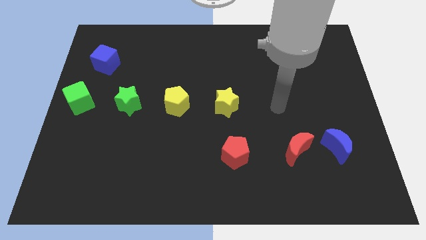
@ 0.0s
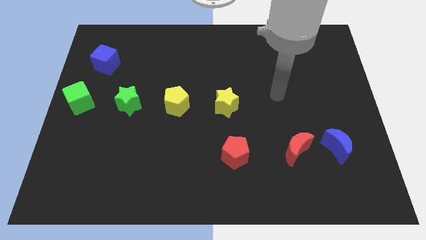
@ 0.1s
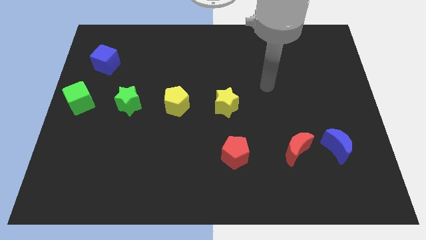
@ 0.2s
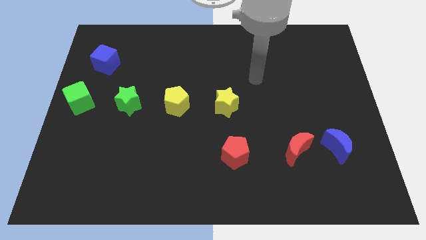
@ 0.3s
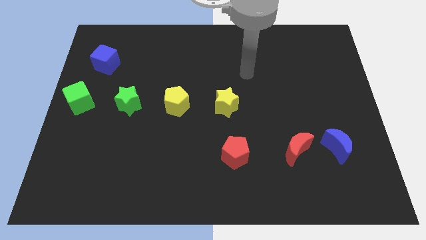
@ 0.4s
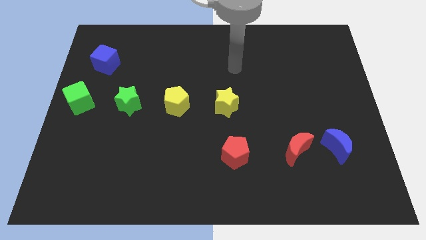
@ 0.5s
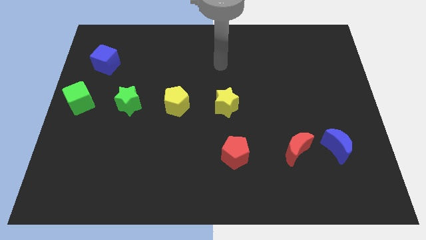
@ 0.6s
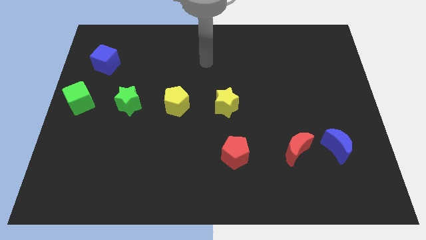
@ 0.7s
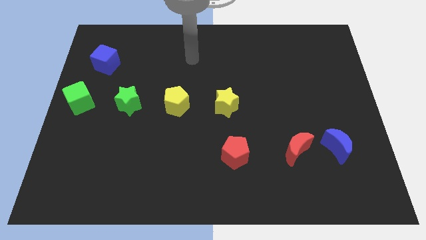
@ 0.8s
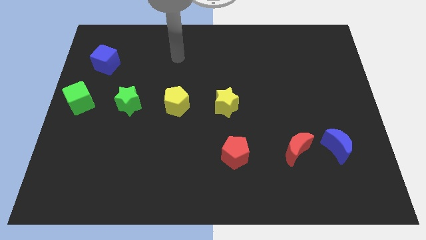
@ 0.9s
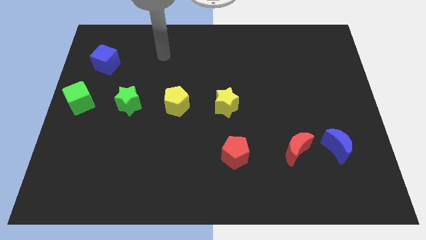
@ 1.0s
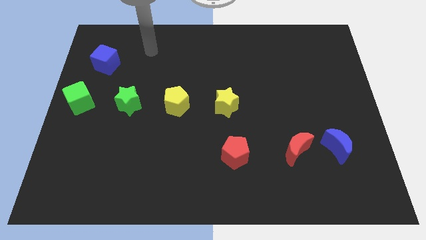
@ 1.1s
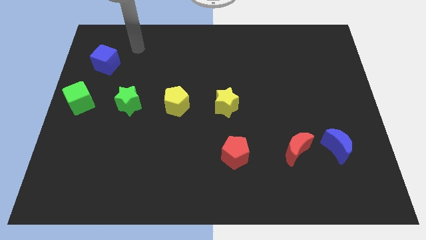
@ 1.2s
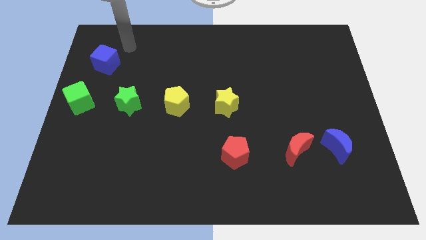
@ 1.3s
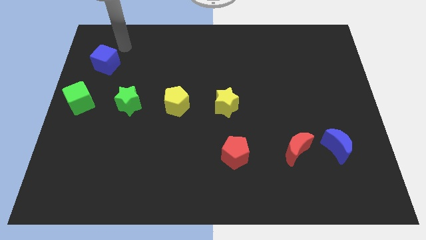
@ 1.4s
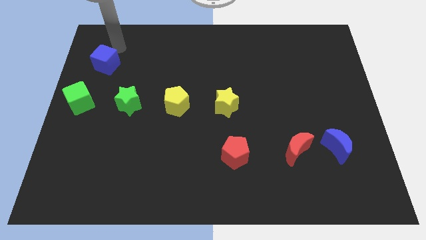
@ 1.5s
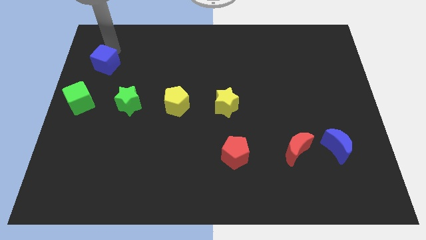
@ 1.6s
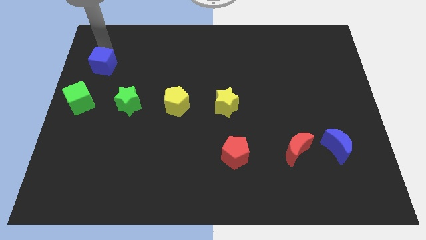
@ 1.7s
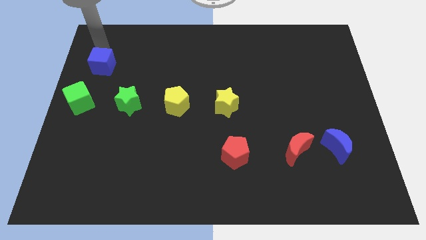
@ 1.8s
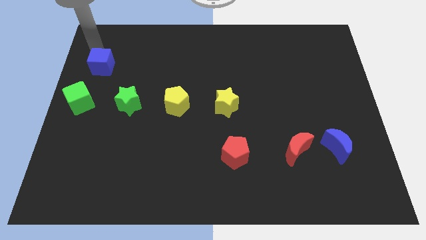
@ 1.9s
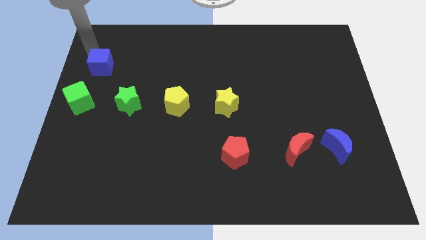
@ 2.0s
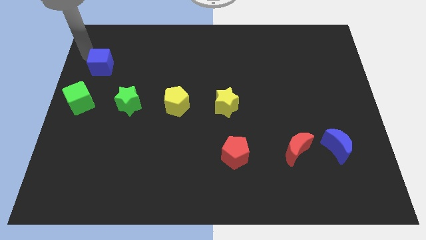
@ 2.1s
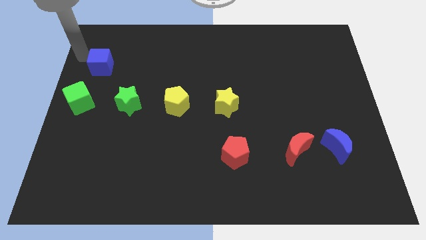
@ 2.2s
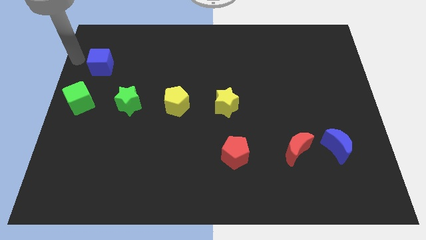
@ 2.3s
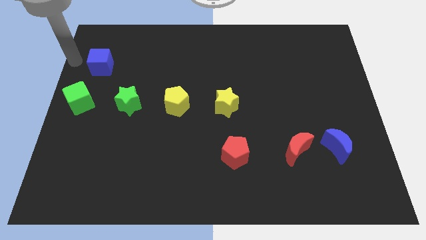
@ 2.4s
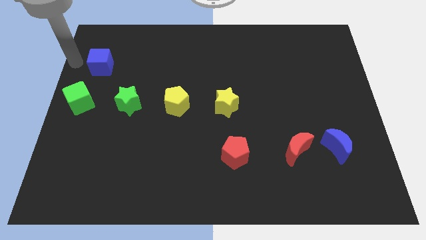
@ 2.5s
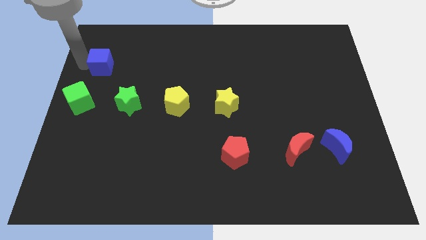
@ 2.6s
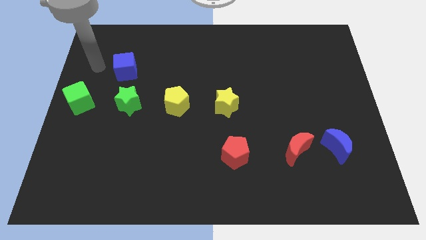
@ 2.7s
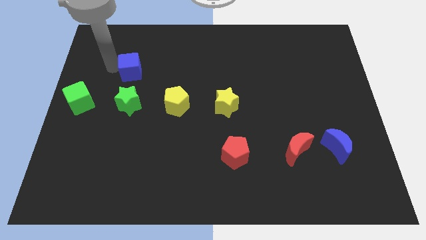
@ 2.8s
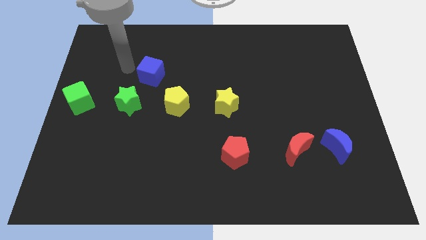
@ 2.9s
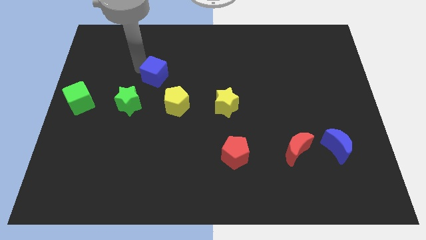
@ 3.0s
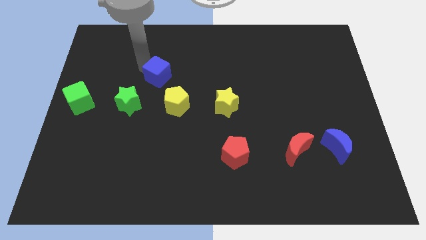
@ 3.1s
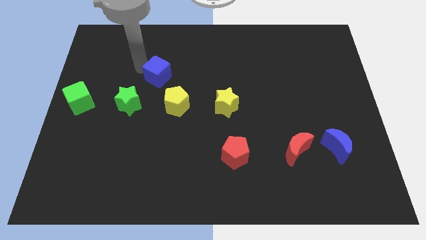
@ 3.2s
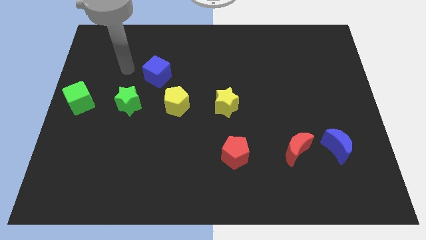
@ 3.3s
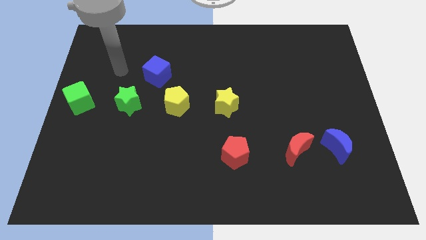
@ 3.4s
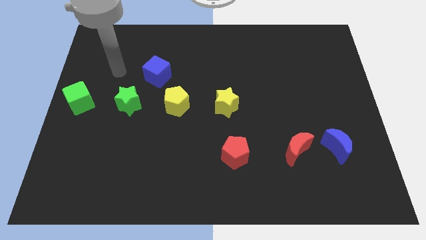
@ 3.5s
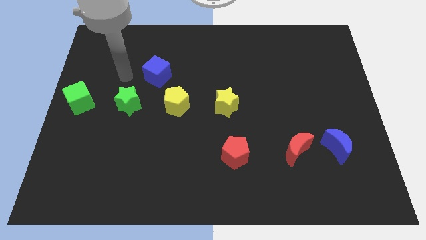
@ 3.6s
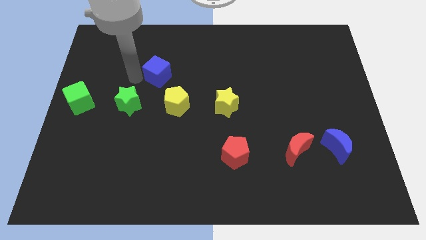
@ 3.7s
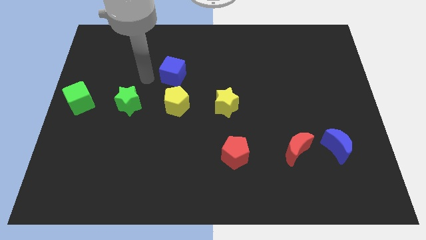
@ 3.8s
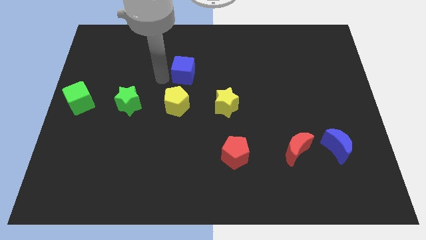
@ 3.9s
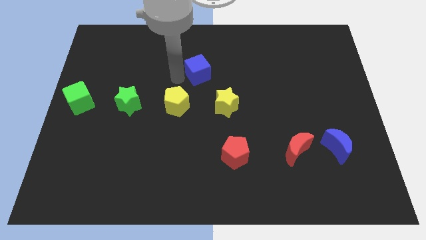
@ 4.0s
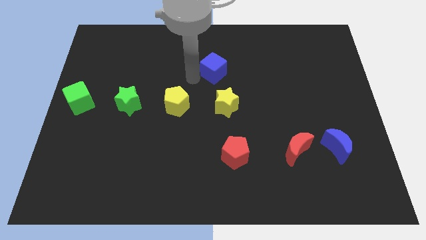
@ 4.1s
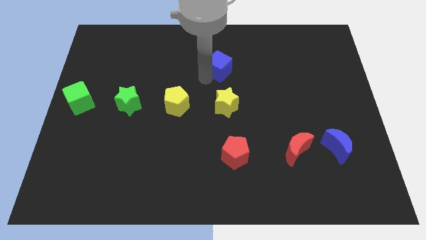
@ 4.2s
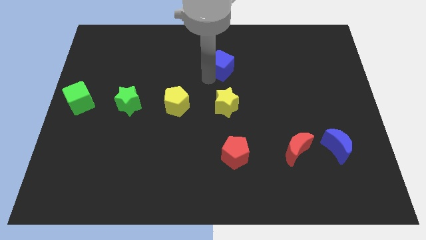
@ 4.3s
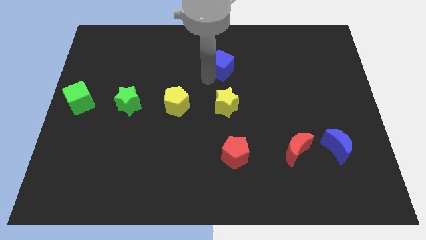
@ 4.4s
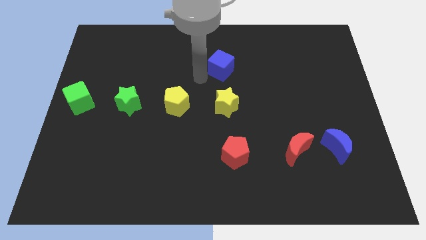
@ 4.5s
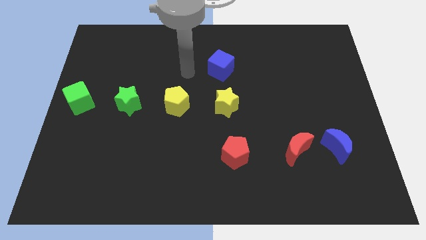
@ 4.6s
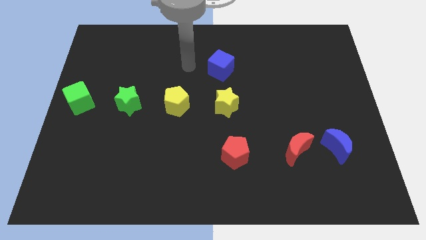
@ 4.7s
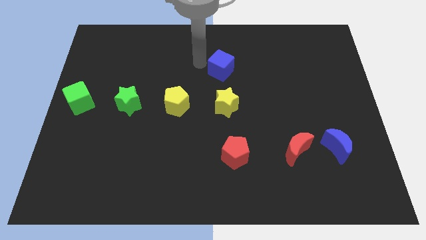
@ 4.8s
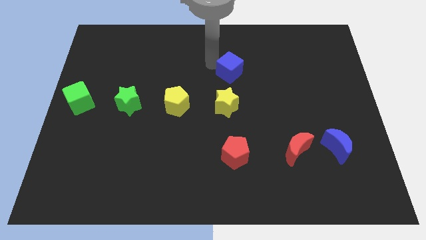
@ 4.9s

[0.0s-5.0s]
push the blue cube above the yellow star

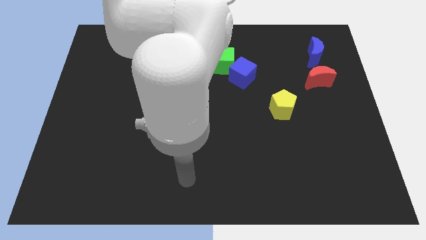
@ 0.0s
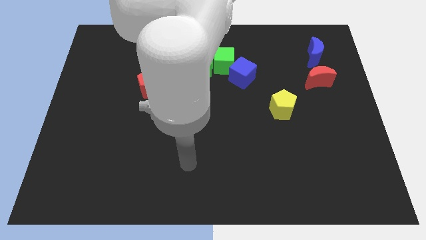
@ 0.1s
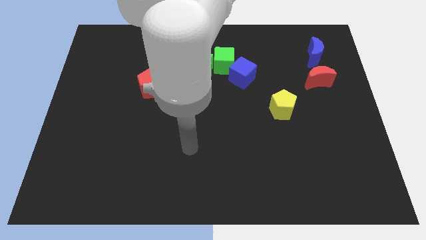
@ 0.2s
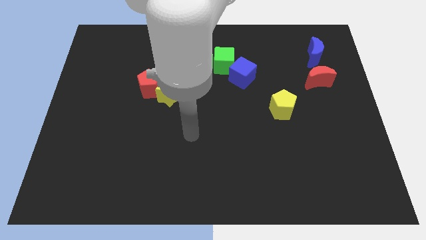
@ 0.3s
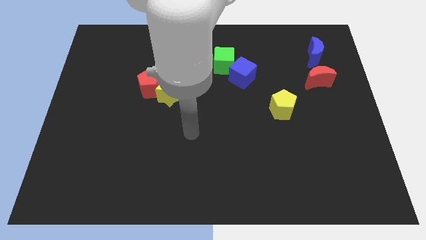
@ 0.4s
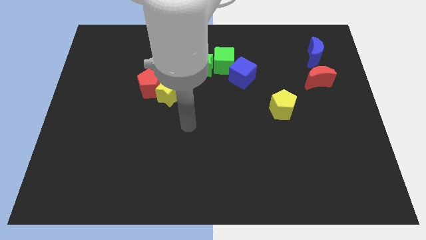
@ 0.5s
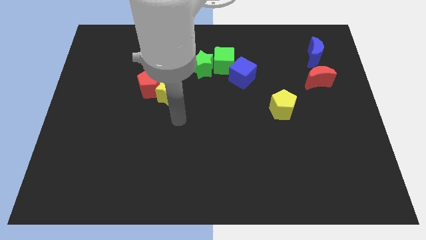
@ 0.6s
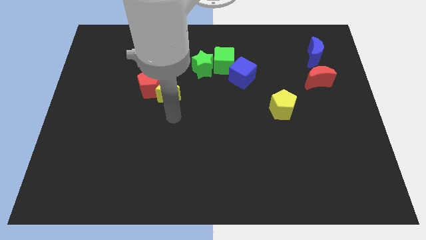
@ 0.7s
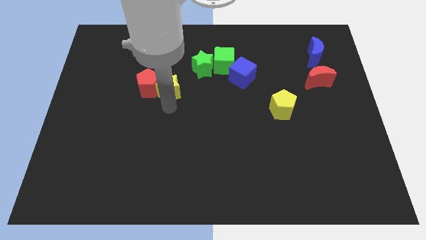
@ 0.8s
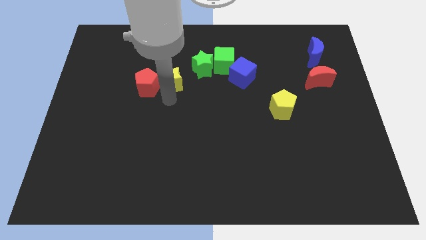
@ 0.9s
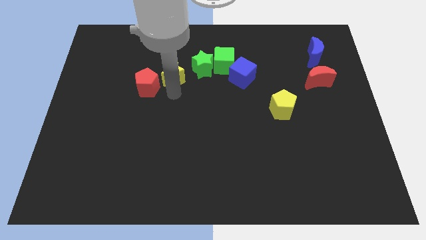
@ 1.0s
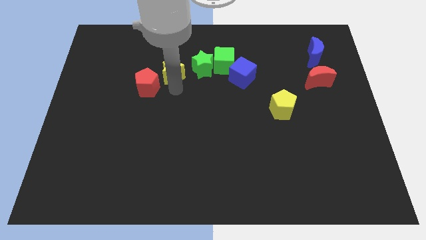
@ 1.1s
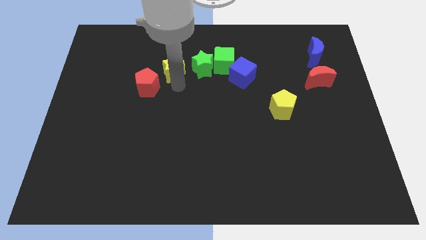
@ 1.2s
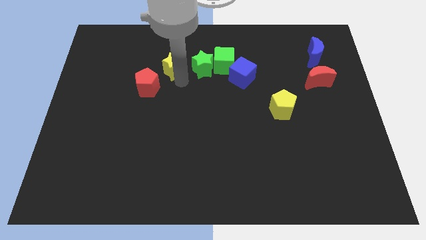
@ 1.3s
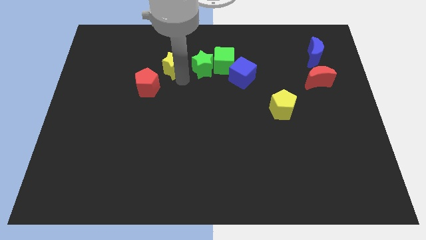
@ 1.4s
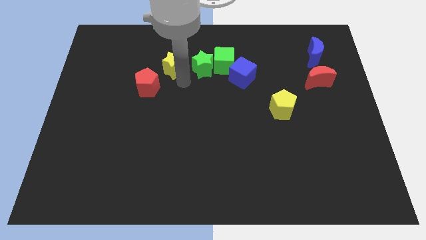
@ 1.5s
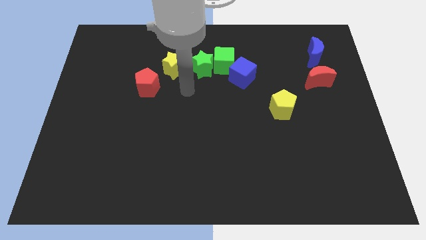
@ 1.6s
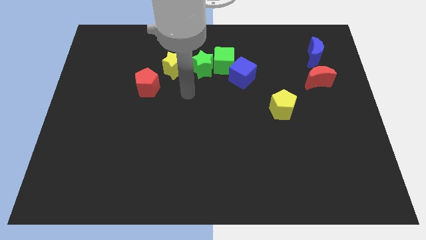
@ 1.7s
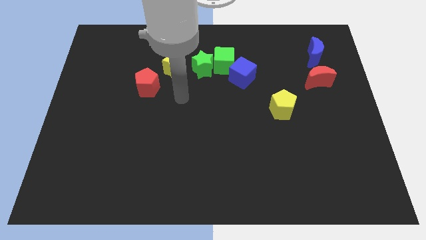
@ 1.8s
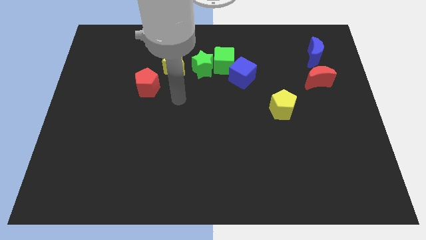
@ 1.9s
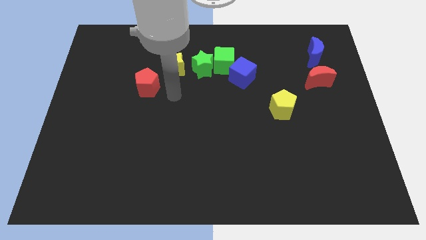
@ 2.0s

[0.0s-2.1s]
push the yellow star to the left side of the green star

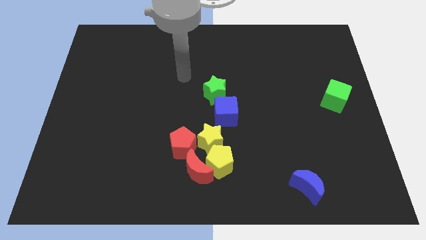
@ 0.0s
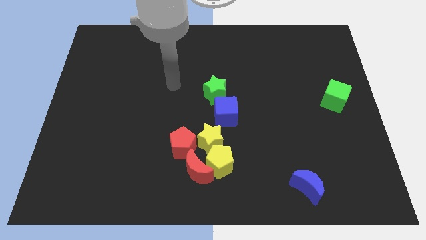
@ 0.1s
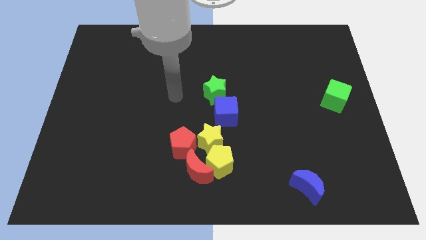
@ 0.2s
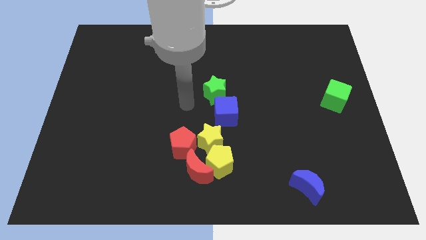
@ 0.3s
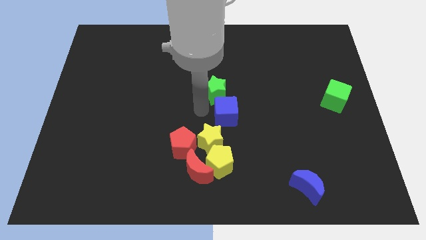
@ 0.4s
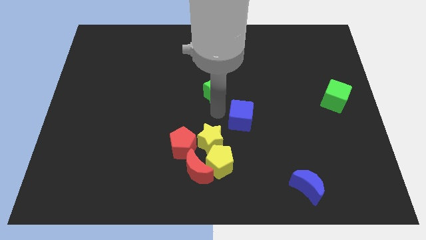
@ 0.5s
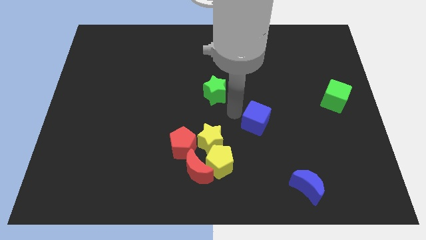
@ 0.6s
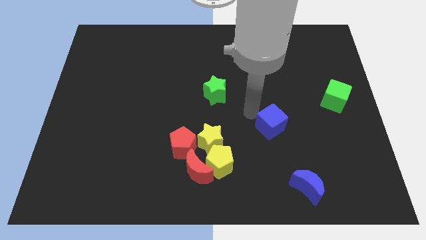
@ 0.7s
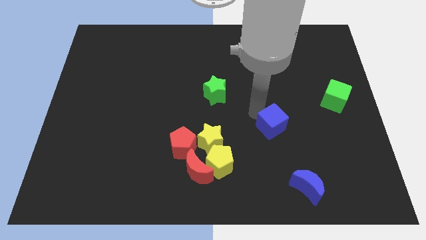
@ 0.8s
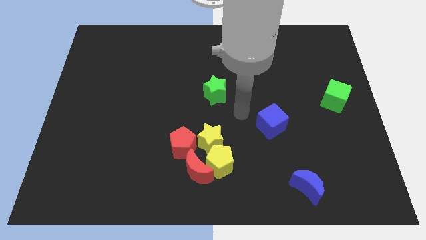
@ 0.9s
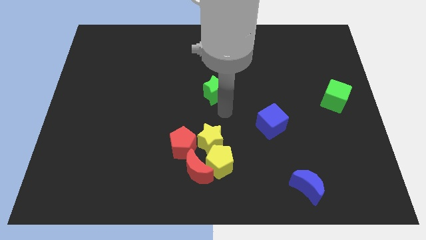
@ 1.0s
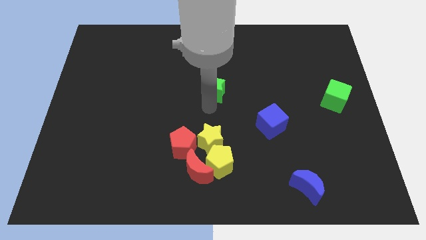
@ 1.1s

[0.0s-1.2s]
separate the blue cube from green star

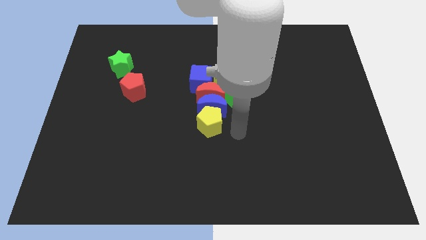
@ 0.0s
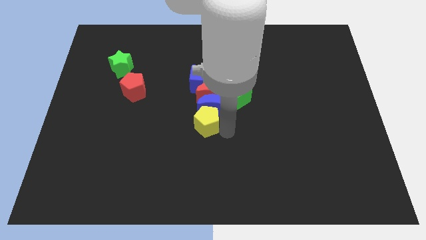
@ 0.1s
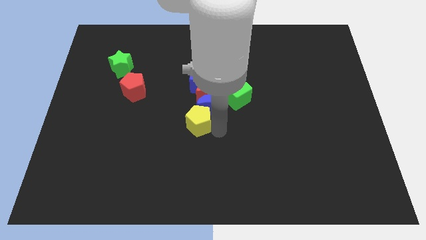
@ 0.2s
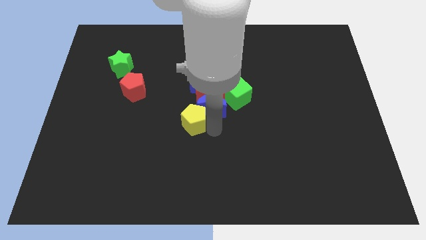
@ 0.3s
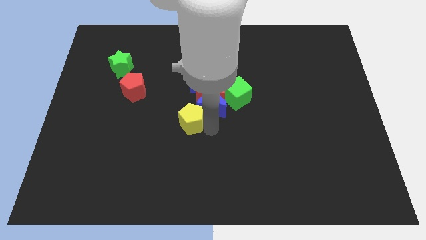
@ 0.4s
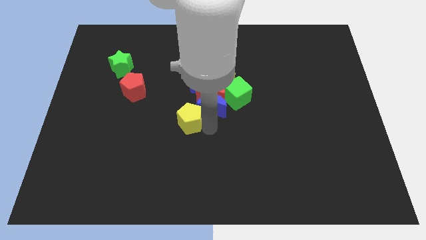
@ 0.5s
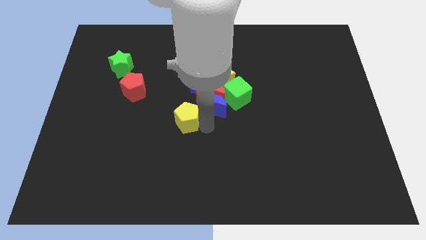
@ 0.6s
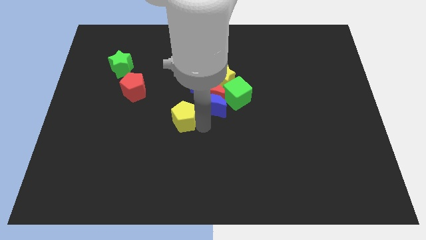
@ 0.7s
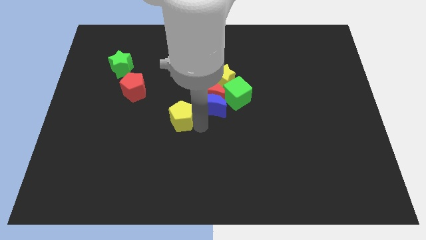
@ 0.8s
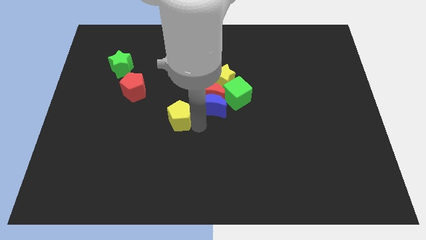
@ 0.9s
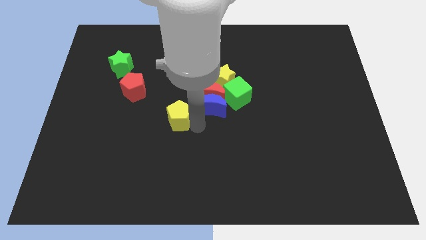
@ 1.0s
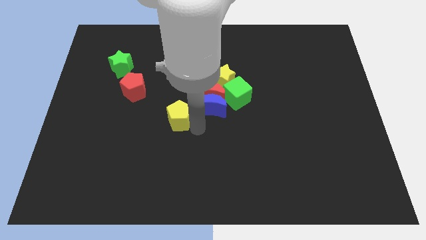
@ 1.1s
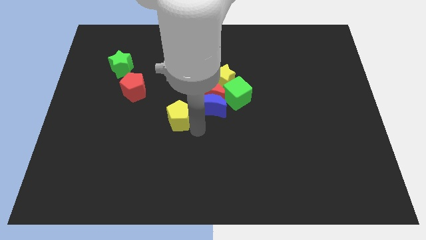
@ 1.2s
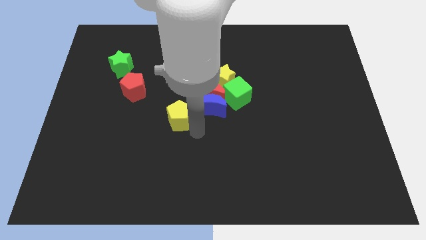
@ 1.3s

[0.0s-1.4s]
move yellow pentagon slightly towards left
